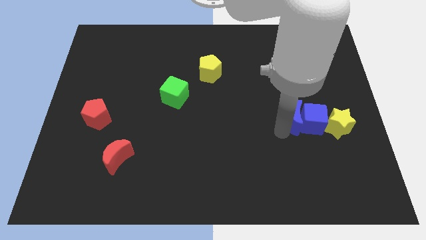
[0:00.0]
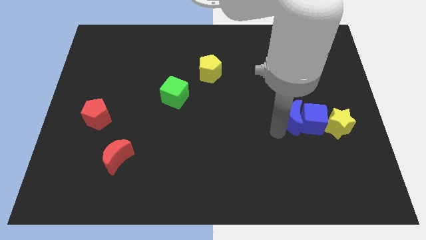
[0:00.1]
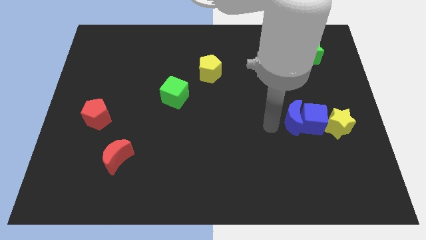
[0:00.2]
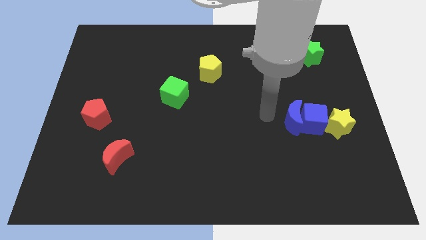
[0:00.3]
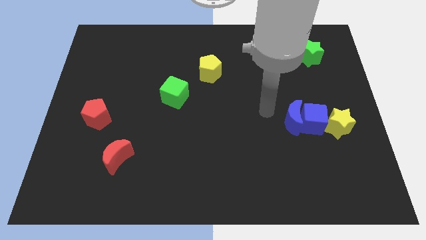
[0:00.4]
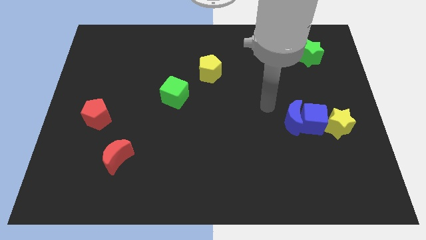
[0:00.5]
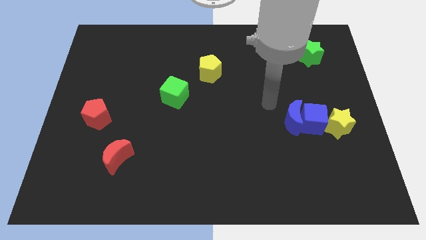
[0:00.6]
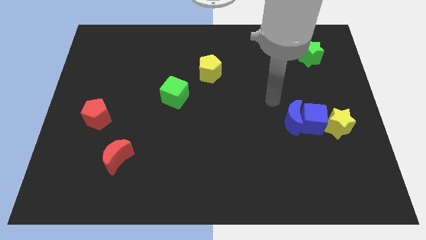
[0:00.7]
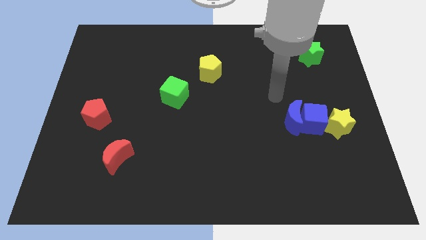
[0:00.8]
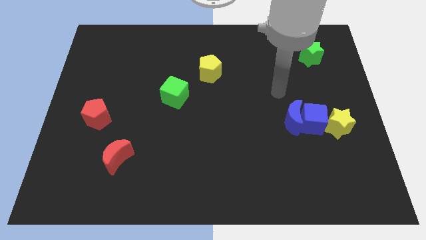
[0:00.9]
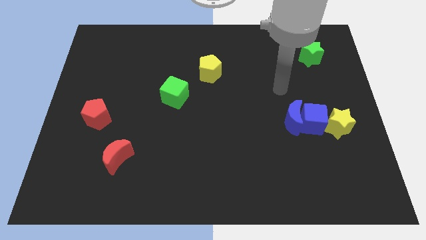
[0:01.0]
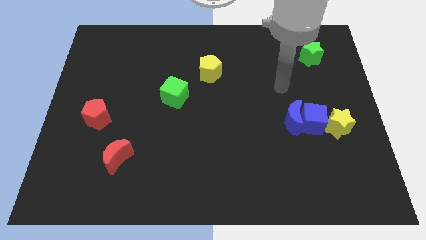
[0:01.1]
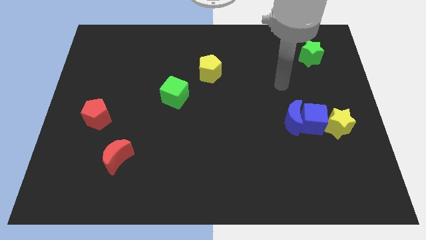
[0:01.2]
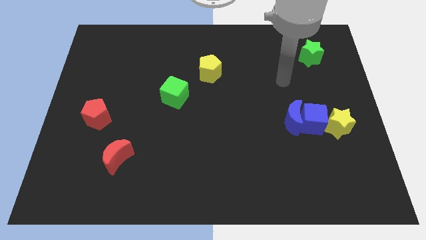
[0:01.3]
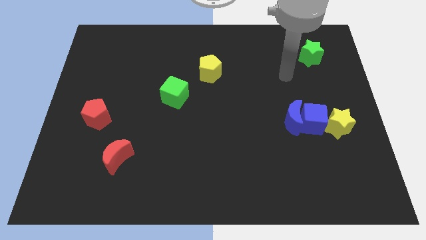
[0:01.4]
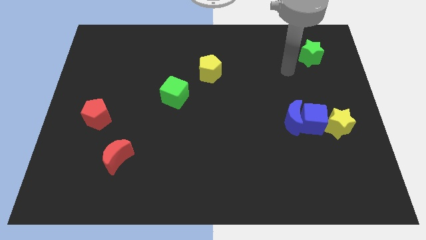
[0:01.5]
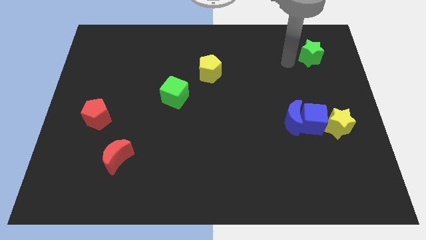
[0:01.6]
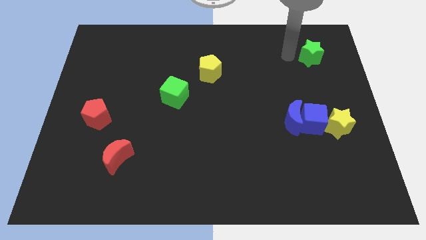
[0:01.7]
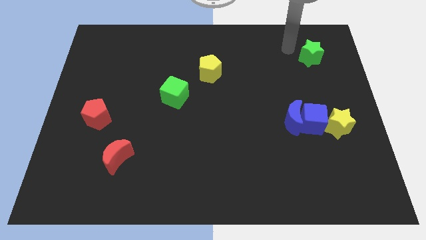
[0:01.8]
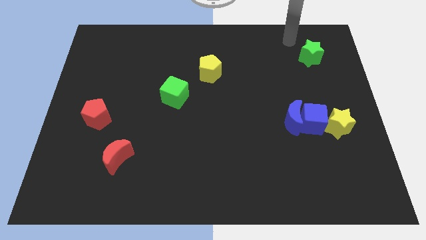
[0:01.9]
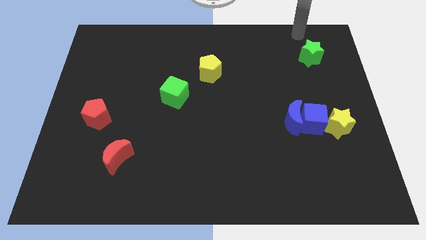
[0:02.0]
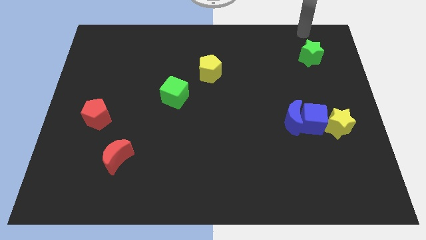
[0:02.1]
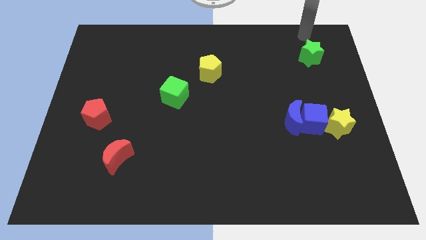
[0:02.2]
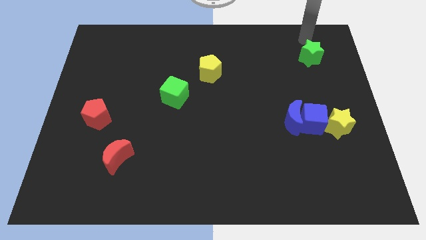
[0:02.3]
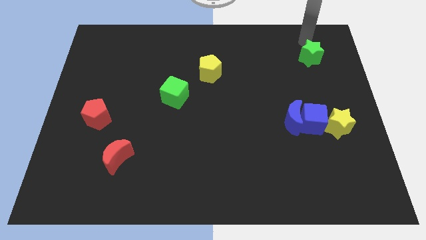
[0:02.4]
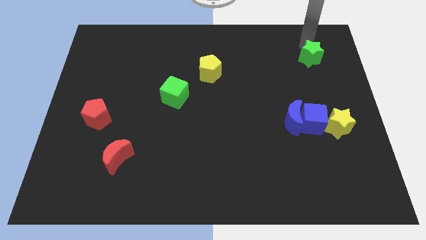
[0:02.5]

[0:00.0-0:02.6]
point the arm at the top of the green star

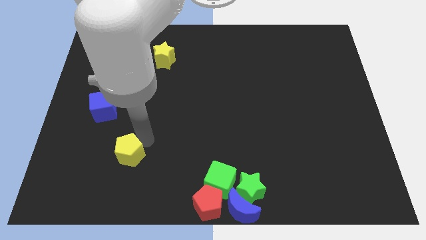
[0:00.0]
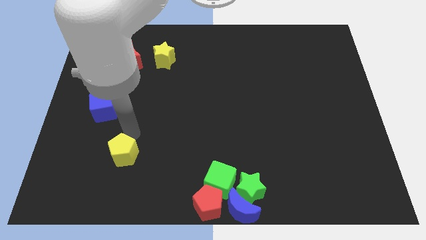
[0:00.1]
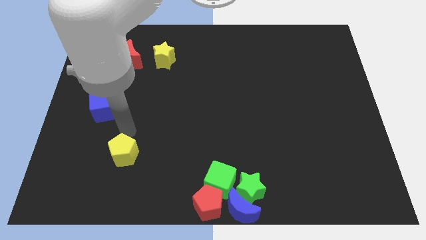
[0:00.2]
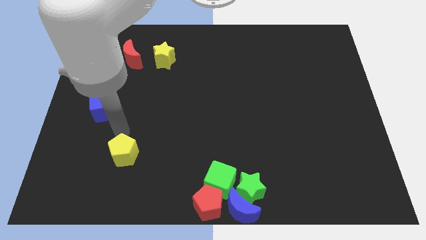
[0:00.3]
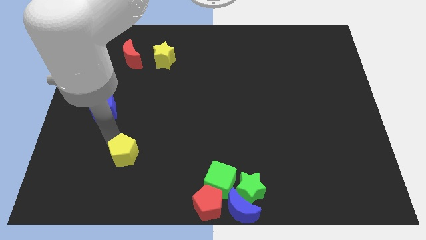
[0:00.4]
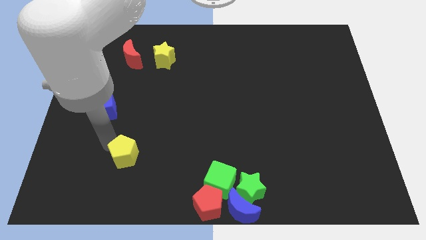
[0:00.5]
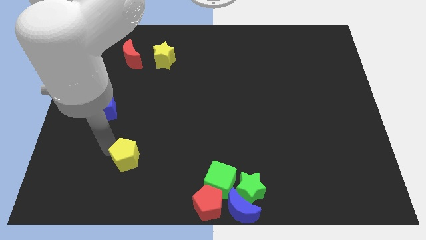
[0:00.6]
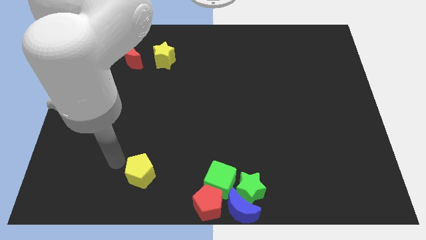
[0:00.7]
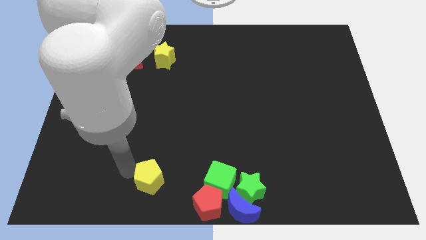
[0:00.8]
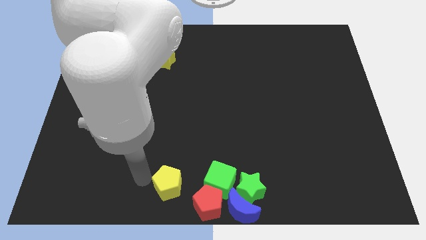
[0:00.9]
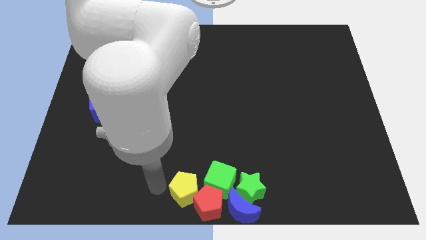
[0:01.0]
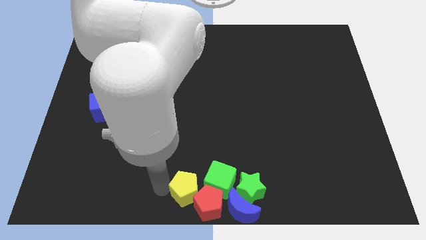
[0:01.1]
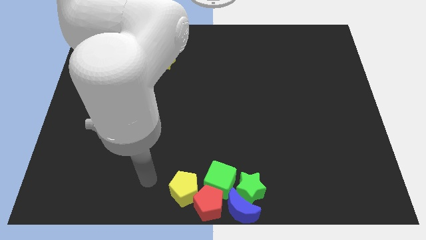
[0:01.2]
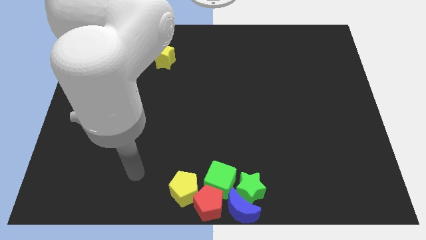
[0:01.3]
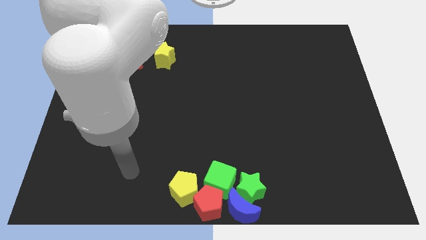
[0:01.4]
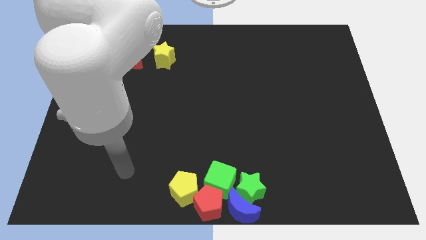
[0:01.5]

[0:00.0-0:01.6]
push the yellow pentgaon into a group of blocks

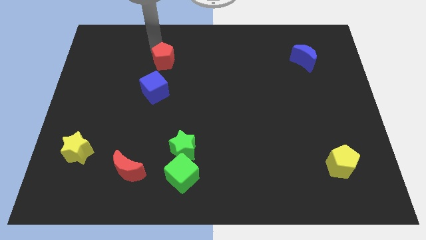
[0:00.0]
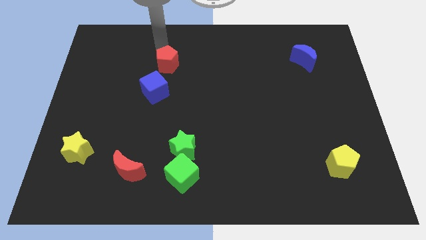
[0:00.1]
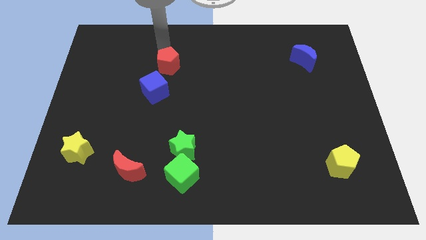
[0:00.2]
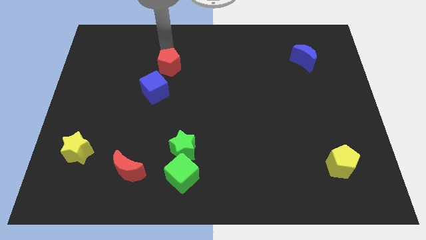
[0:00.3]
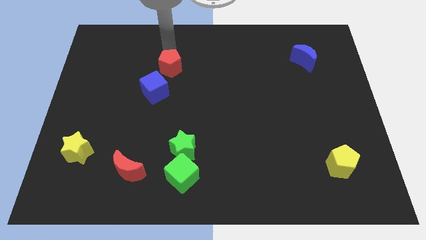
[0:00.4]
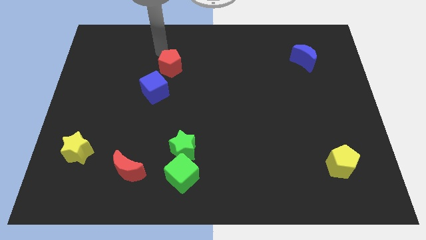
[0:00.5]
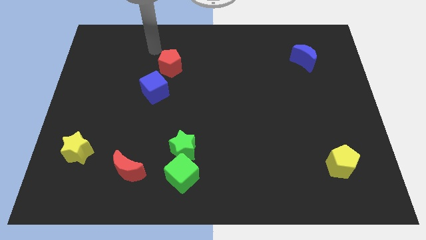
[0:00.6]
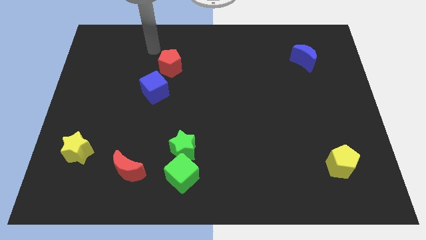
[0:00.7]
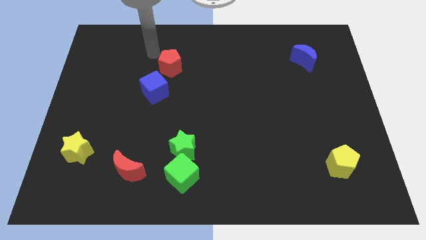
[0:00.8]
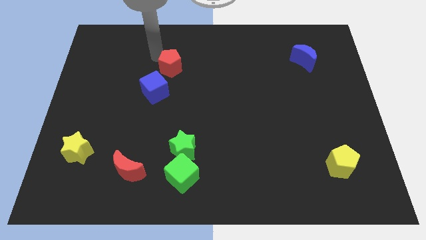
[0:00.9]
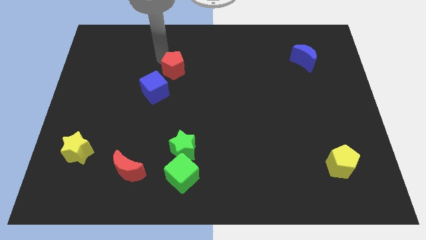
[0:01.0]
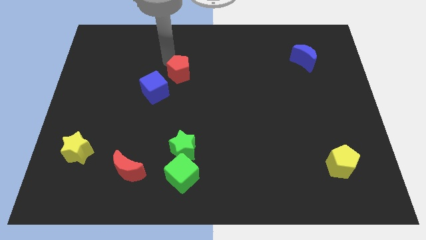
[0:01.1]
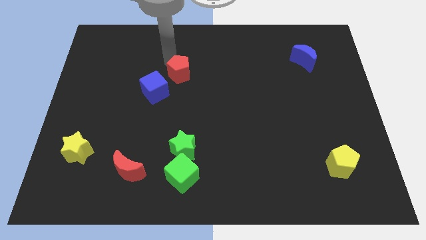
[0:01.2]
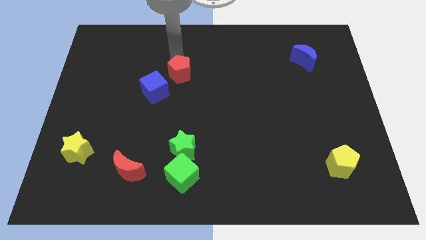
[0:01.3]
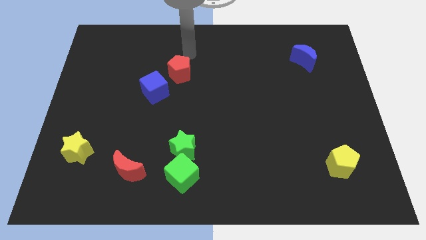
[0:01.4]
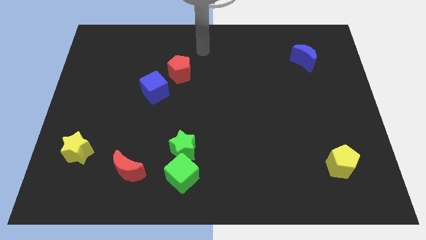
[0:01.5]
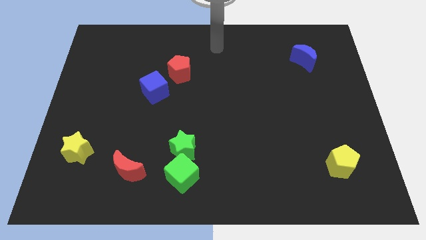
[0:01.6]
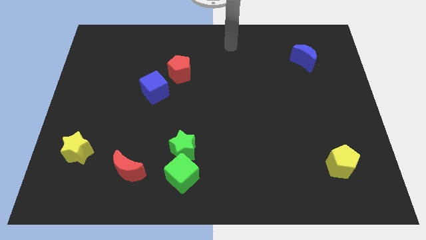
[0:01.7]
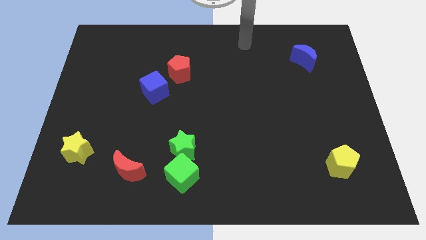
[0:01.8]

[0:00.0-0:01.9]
push the red pentagon diagonally top right to the blue cube

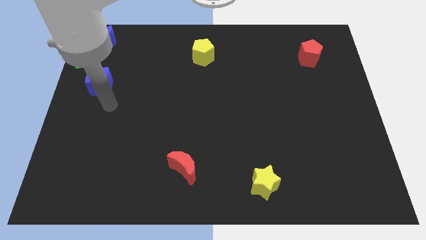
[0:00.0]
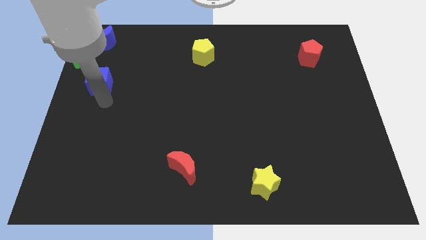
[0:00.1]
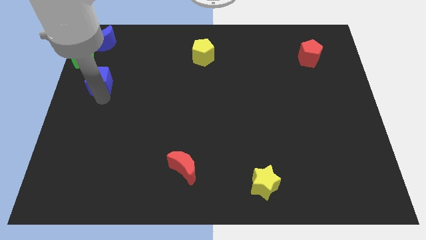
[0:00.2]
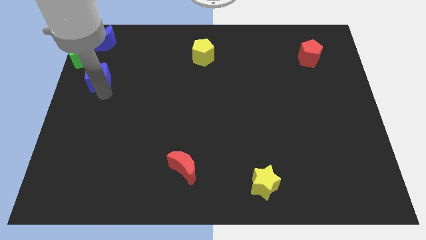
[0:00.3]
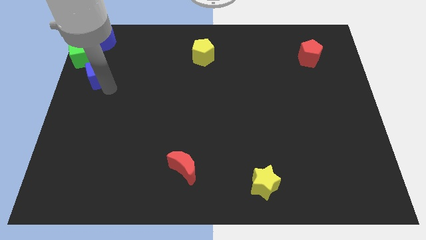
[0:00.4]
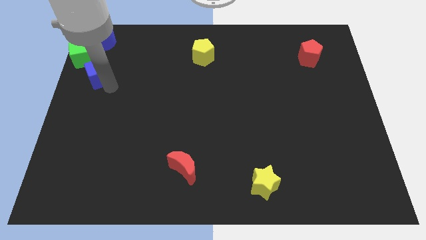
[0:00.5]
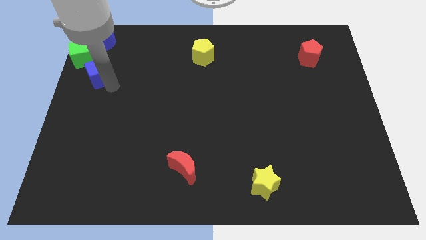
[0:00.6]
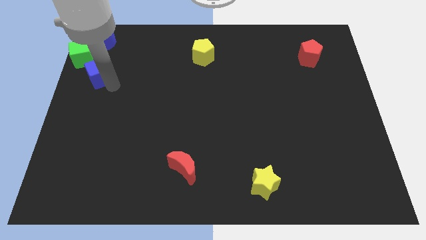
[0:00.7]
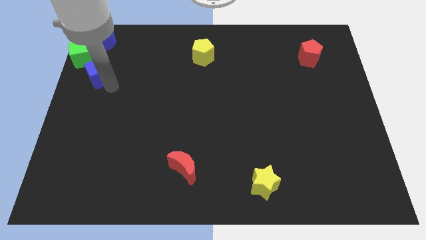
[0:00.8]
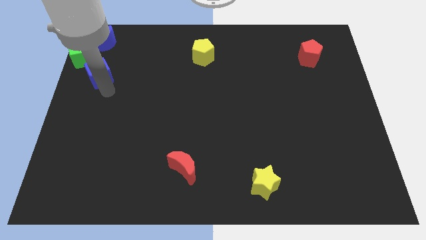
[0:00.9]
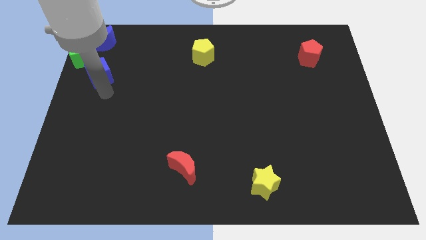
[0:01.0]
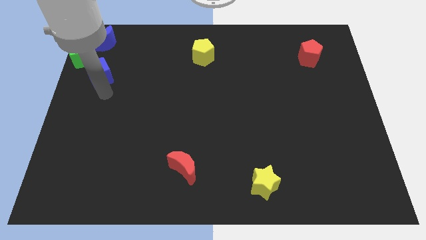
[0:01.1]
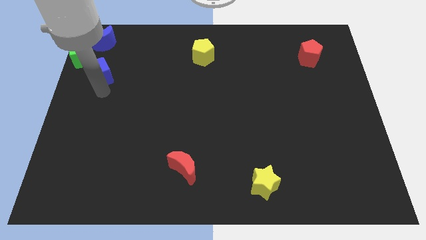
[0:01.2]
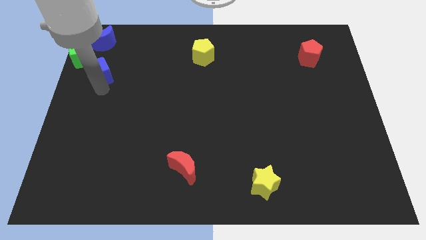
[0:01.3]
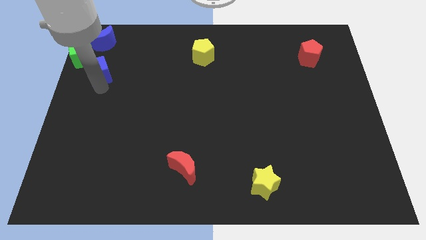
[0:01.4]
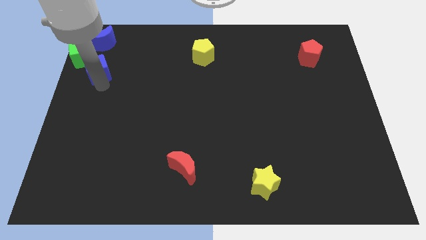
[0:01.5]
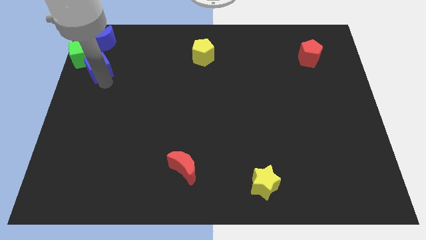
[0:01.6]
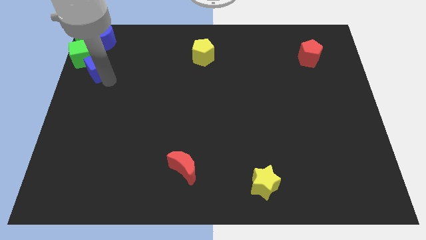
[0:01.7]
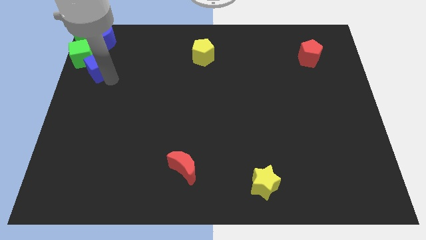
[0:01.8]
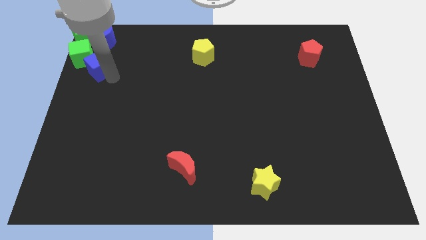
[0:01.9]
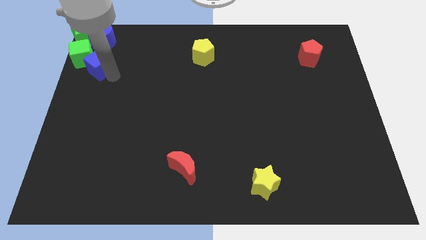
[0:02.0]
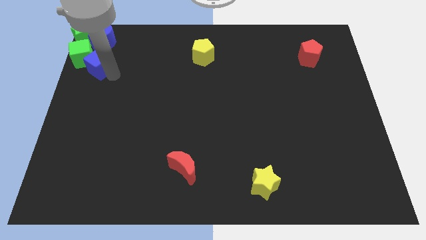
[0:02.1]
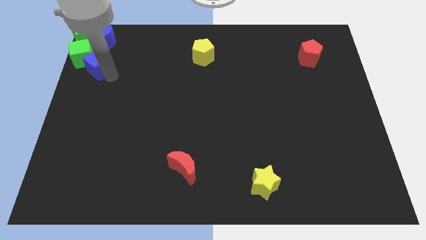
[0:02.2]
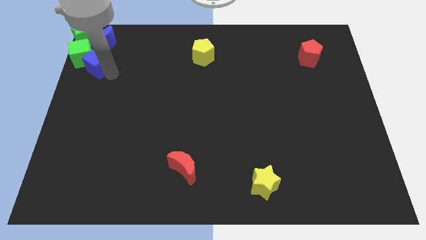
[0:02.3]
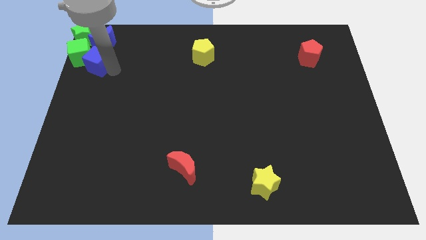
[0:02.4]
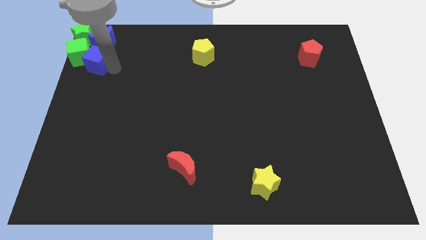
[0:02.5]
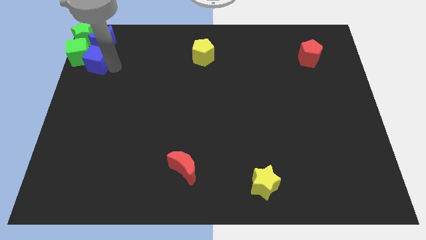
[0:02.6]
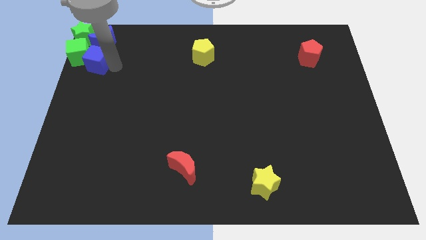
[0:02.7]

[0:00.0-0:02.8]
push the blue cube into the green cube

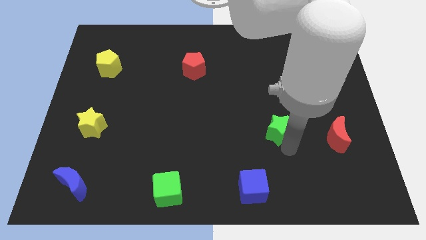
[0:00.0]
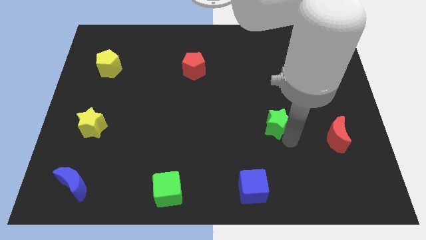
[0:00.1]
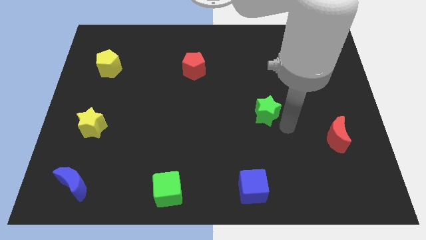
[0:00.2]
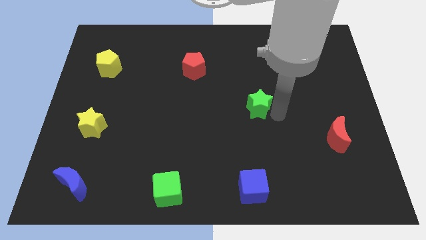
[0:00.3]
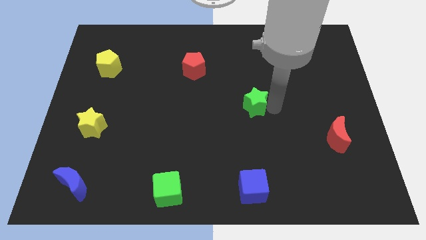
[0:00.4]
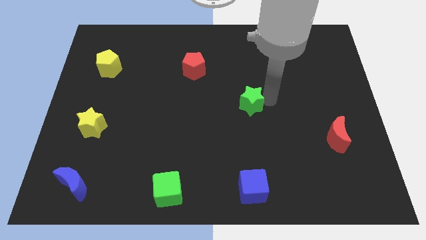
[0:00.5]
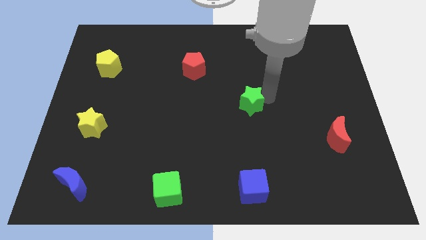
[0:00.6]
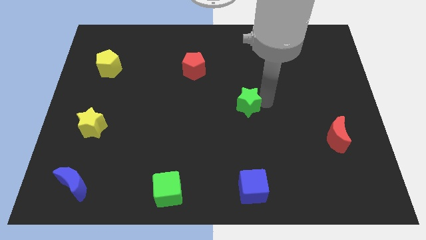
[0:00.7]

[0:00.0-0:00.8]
move the green star to the top of the board
